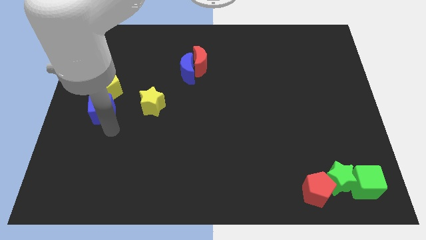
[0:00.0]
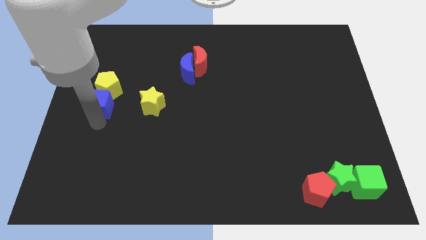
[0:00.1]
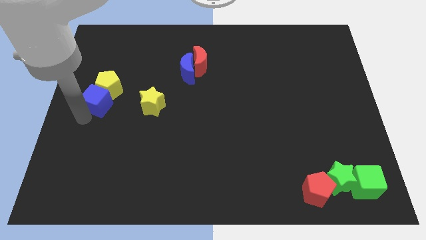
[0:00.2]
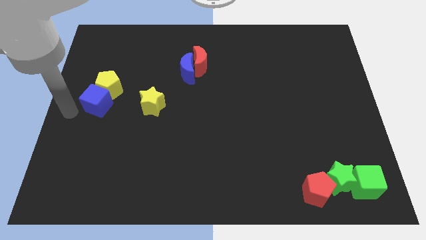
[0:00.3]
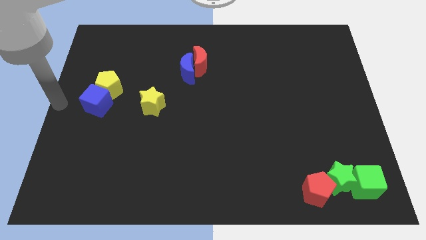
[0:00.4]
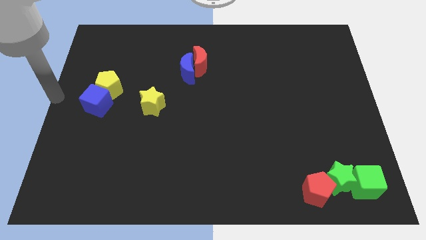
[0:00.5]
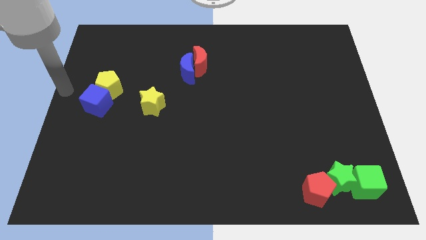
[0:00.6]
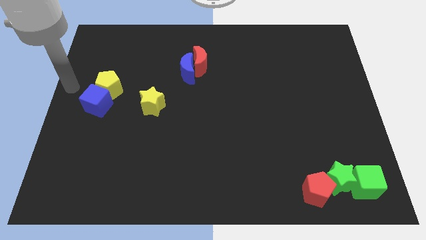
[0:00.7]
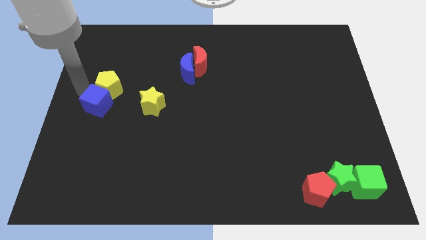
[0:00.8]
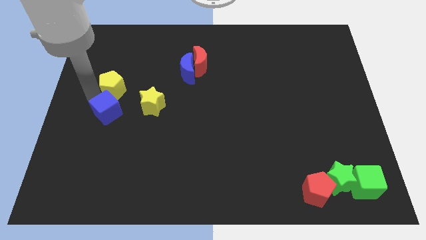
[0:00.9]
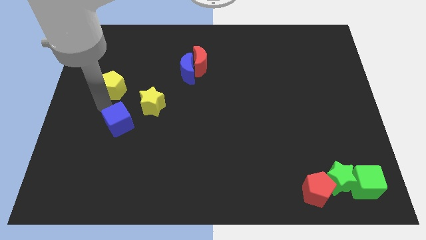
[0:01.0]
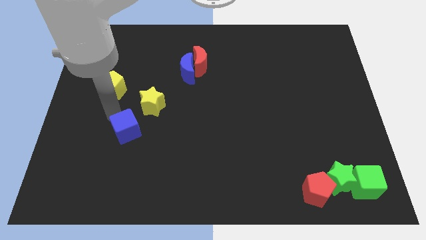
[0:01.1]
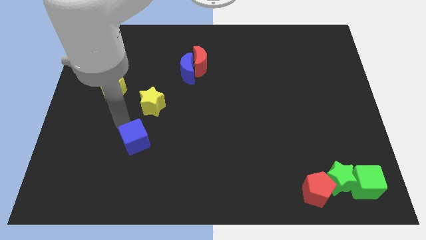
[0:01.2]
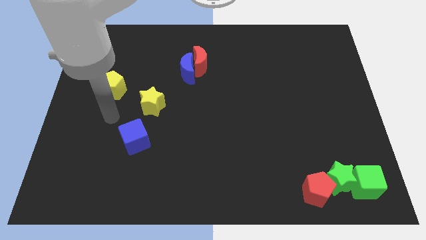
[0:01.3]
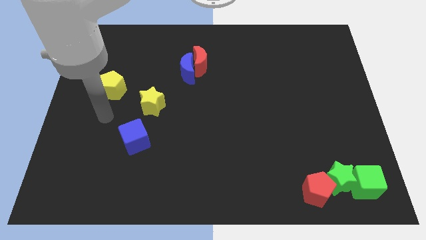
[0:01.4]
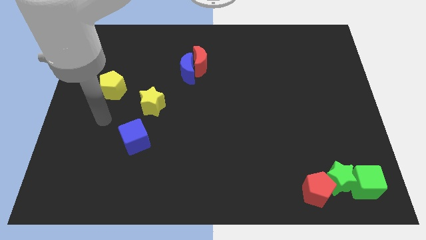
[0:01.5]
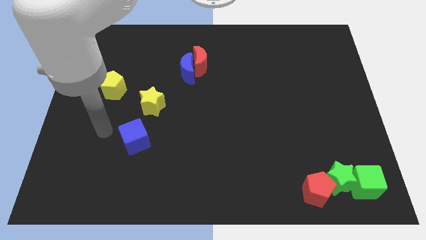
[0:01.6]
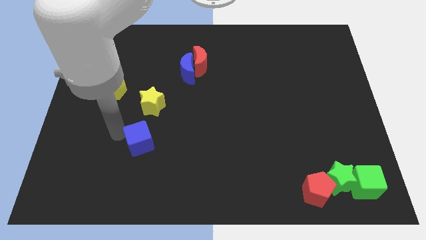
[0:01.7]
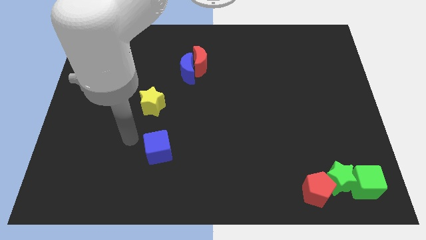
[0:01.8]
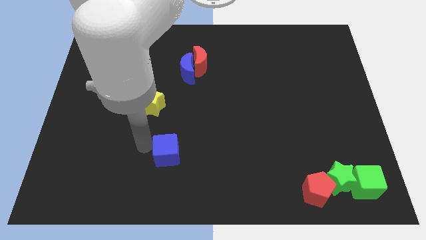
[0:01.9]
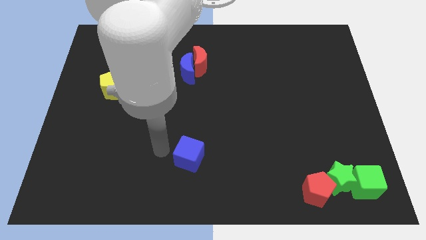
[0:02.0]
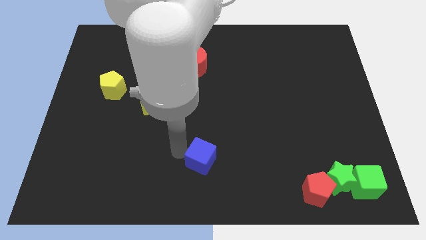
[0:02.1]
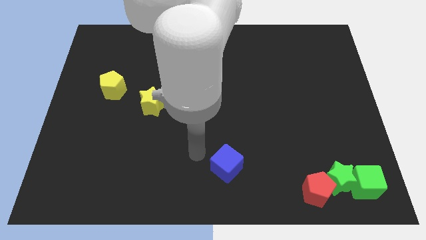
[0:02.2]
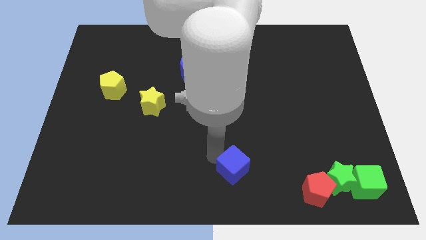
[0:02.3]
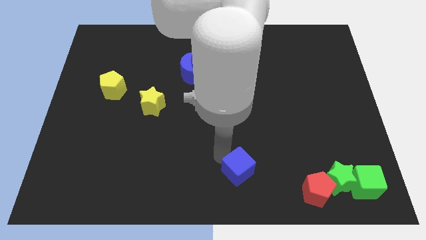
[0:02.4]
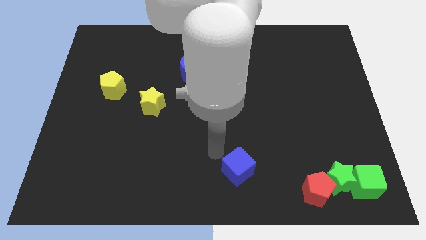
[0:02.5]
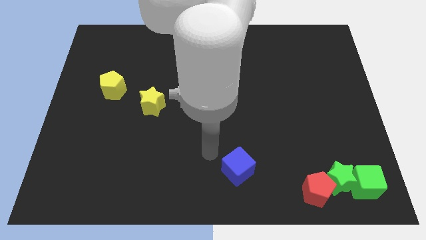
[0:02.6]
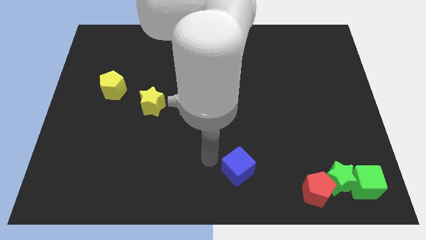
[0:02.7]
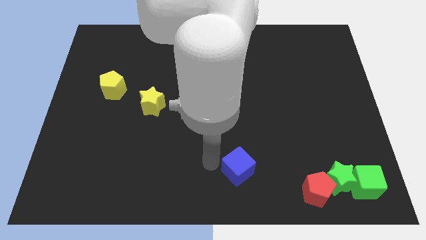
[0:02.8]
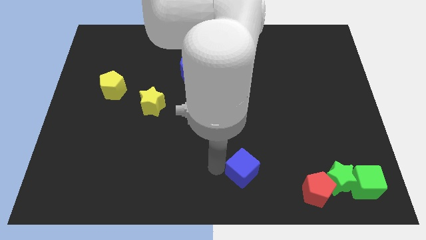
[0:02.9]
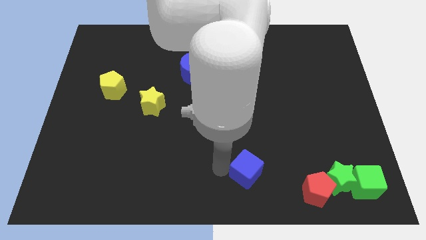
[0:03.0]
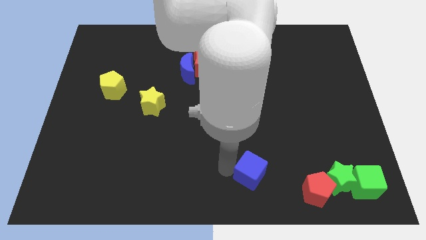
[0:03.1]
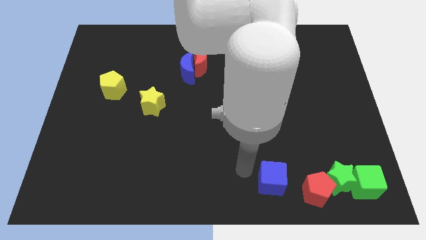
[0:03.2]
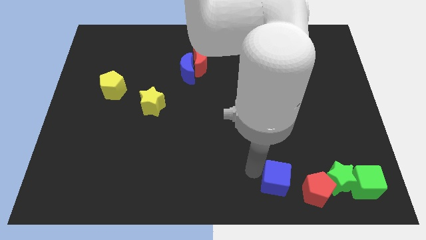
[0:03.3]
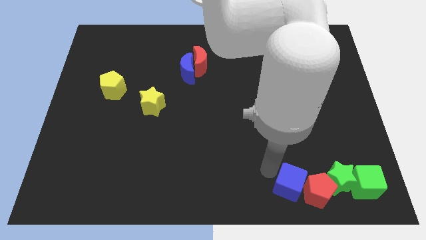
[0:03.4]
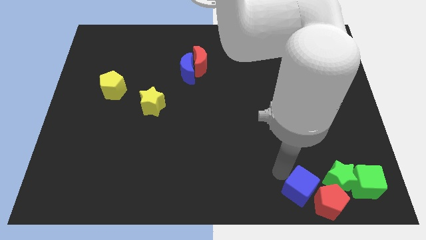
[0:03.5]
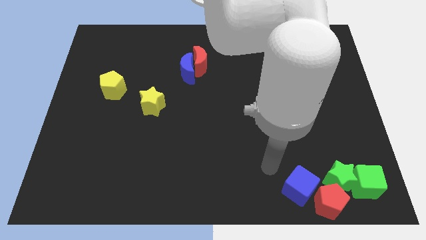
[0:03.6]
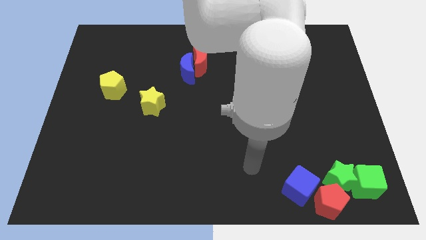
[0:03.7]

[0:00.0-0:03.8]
move the blue cube close to the red pentagon

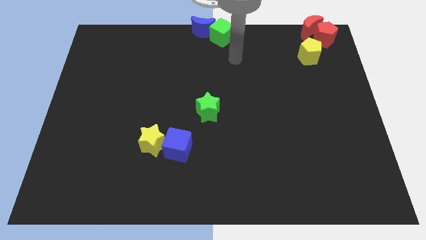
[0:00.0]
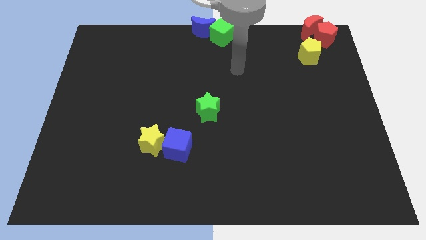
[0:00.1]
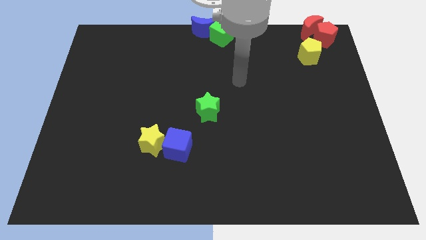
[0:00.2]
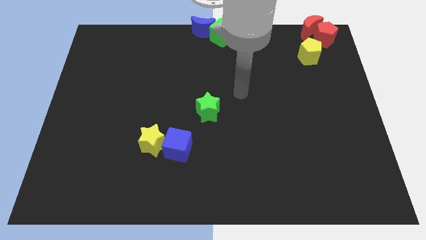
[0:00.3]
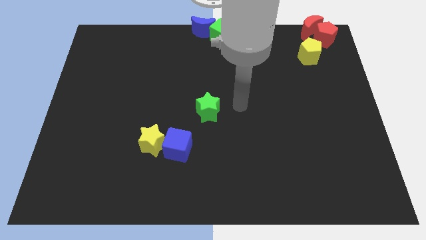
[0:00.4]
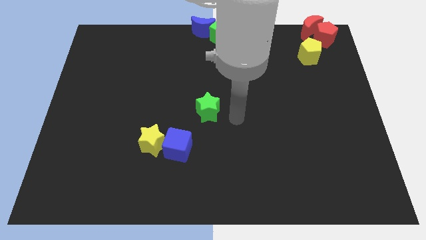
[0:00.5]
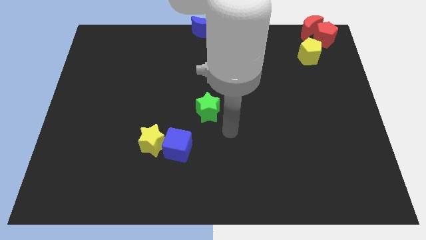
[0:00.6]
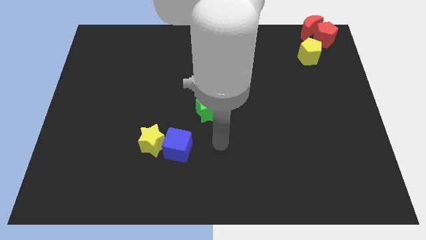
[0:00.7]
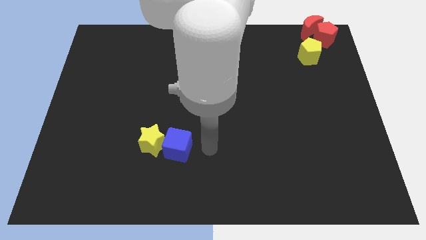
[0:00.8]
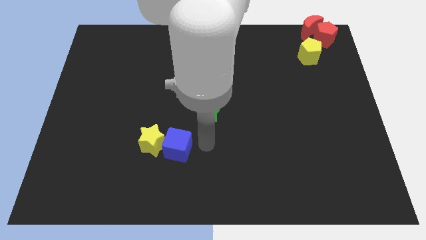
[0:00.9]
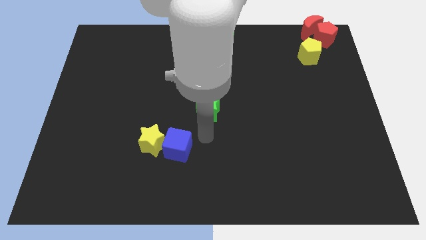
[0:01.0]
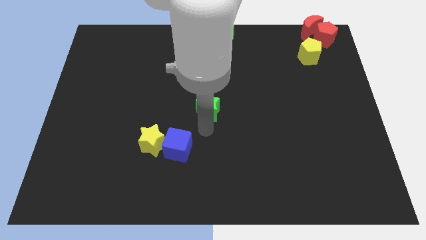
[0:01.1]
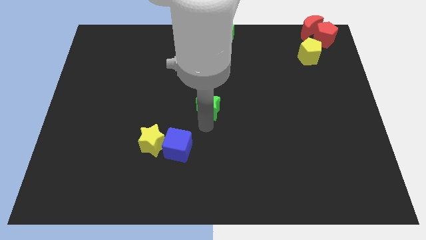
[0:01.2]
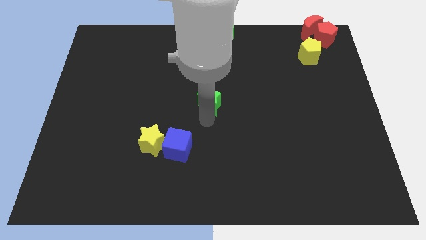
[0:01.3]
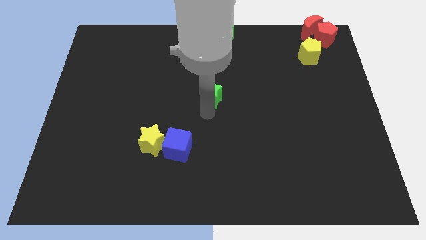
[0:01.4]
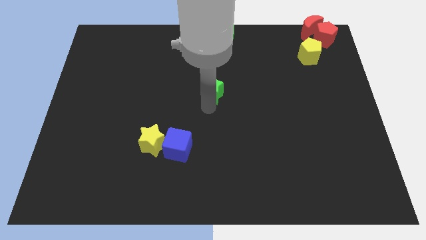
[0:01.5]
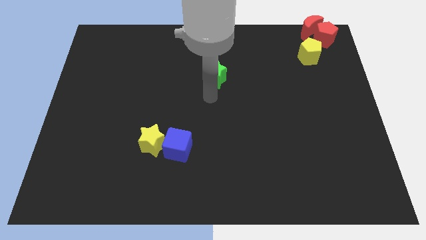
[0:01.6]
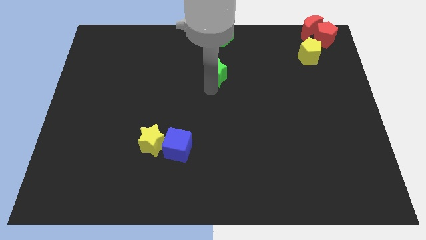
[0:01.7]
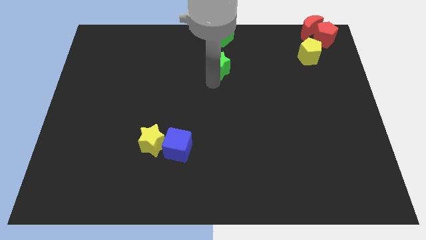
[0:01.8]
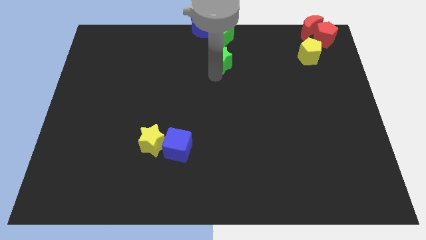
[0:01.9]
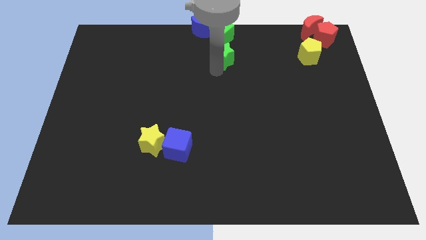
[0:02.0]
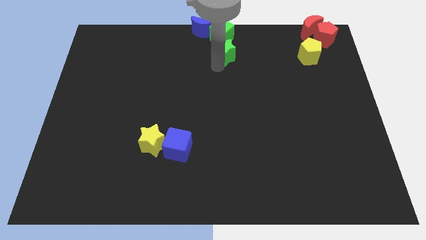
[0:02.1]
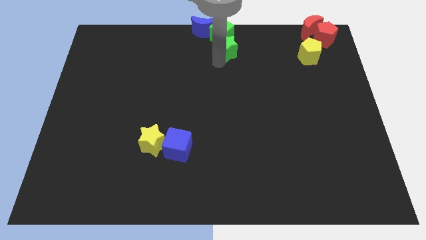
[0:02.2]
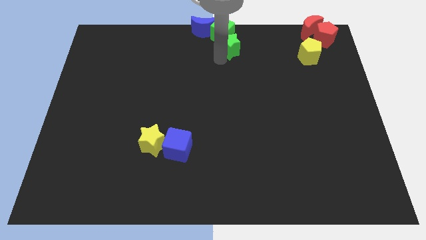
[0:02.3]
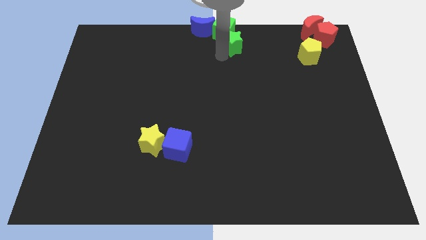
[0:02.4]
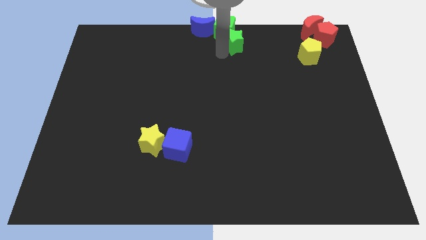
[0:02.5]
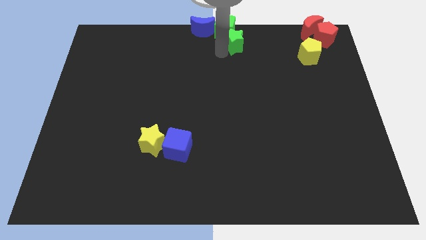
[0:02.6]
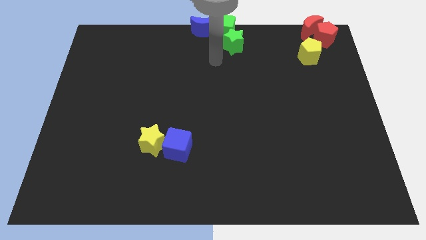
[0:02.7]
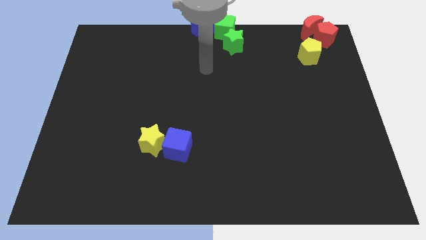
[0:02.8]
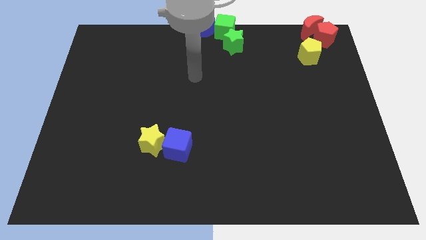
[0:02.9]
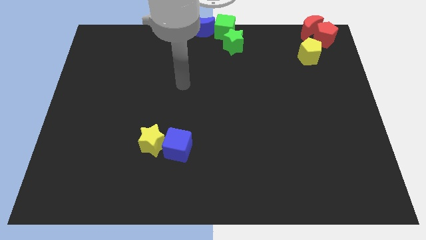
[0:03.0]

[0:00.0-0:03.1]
push the green star towards the green cube

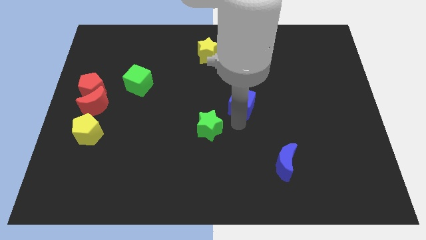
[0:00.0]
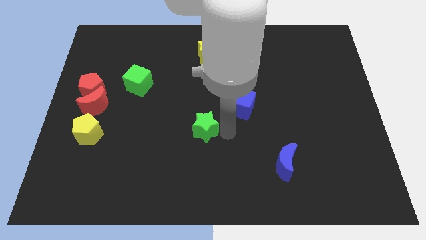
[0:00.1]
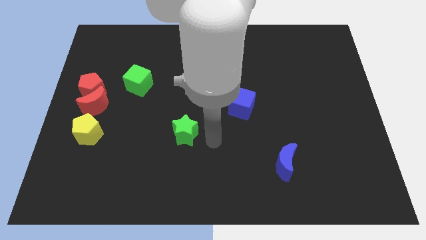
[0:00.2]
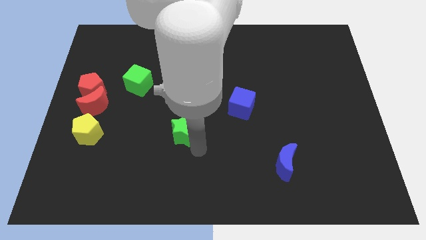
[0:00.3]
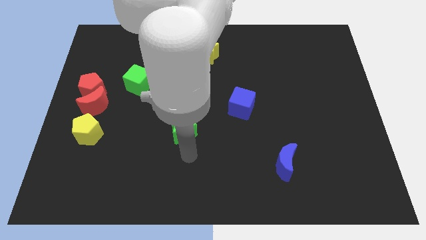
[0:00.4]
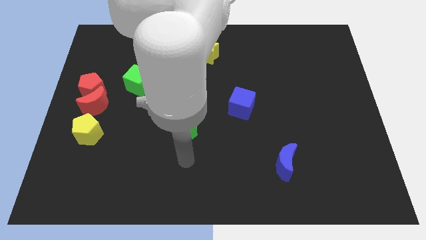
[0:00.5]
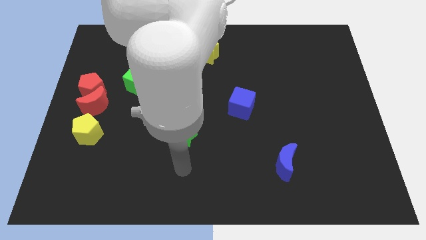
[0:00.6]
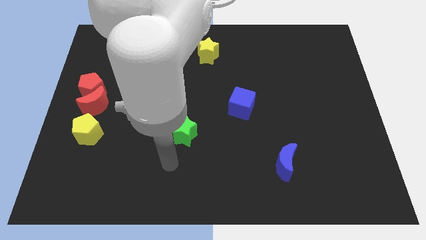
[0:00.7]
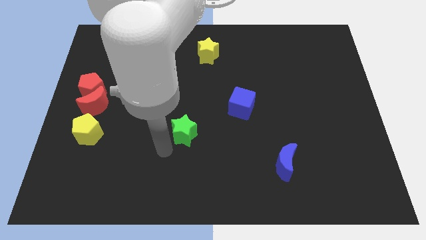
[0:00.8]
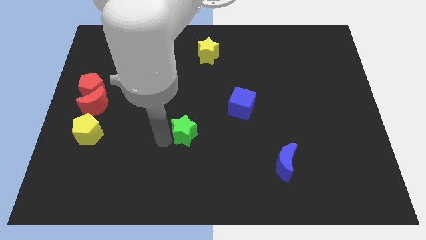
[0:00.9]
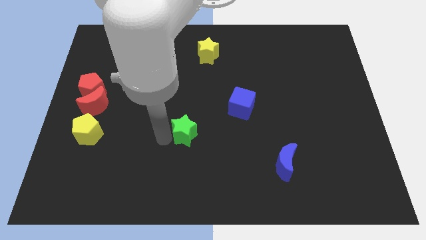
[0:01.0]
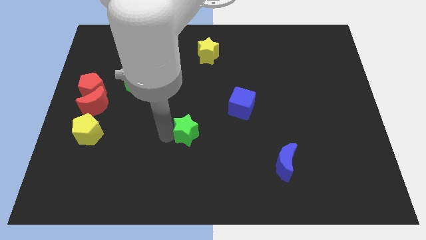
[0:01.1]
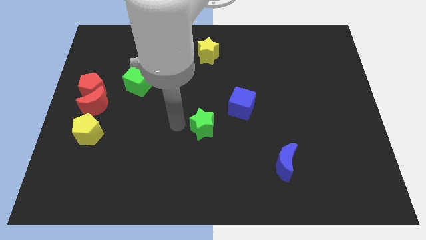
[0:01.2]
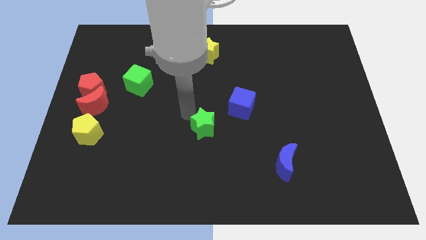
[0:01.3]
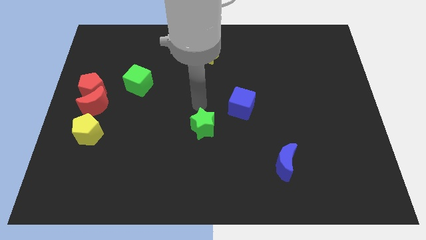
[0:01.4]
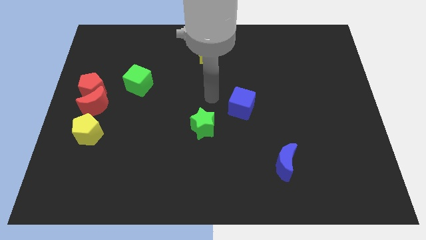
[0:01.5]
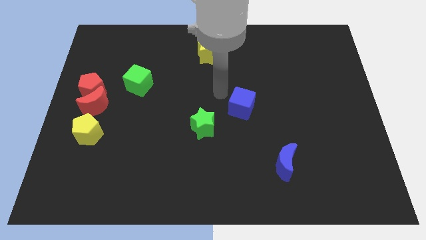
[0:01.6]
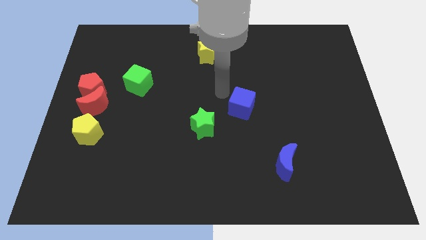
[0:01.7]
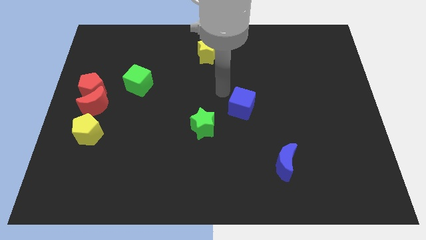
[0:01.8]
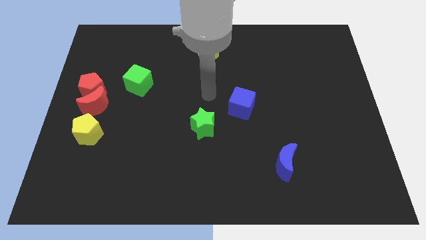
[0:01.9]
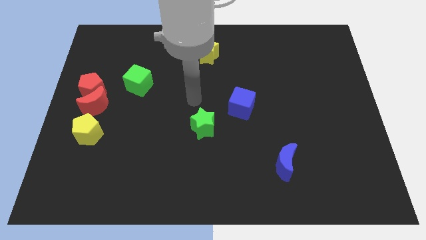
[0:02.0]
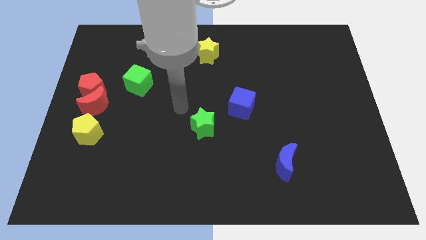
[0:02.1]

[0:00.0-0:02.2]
adjust the green star diagonally in between the green cube and blue moon
